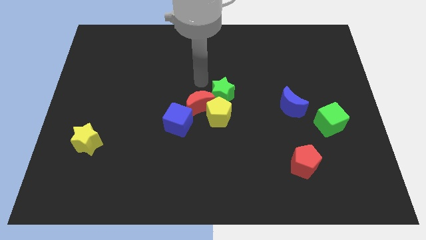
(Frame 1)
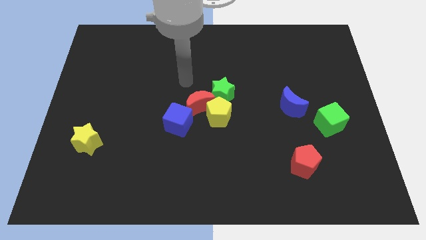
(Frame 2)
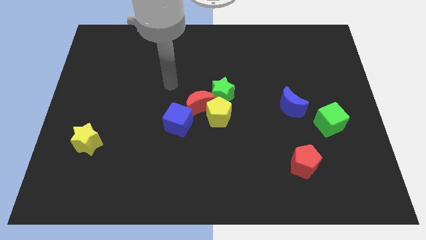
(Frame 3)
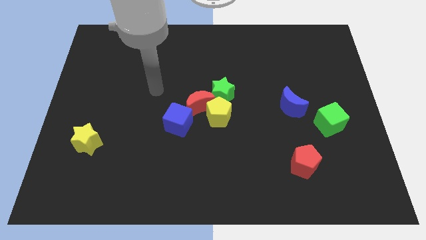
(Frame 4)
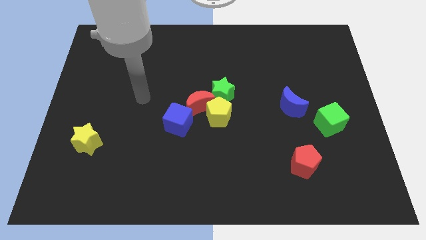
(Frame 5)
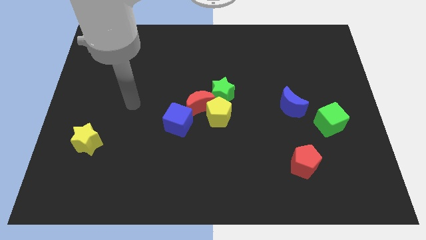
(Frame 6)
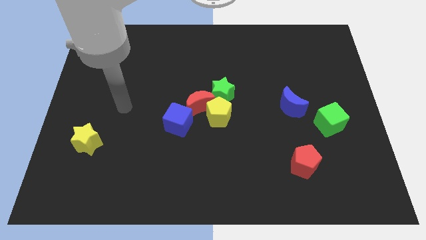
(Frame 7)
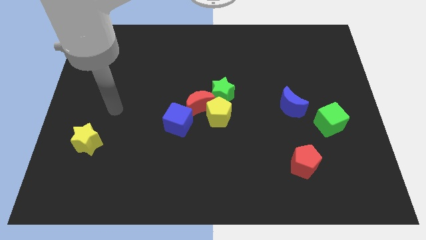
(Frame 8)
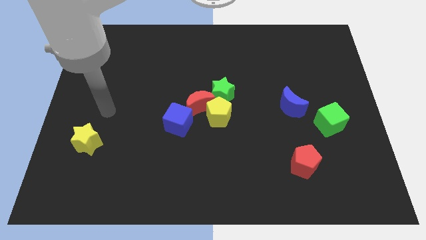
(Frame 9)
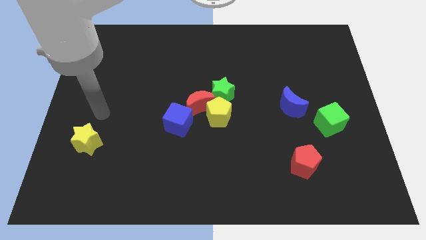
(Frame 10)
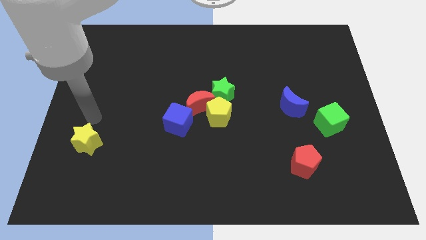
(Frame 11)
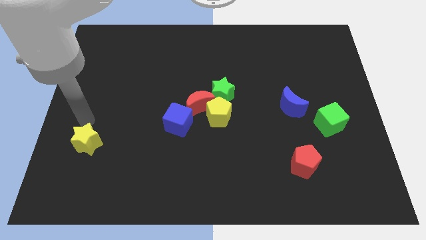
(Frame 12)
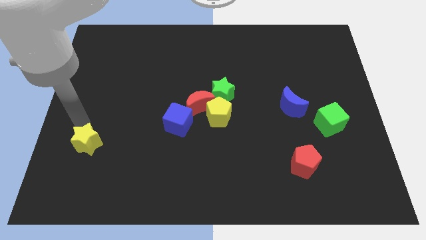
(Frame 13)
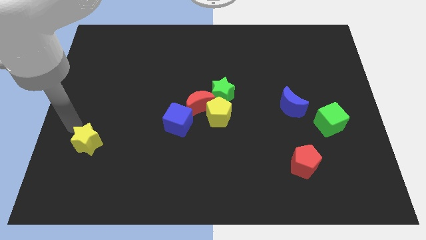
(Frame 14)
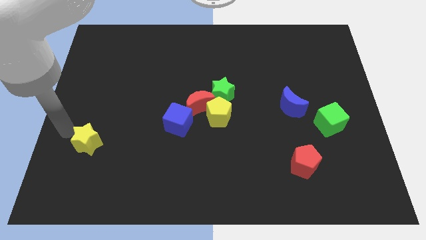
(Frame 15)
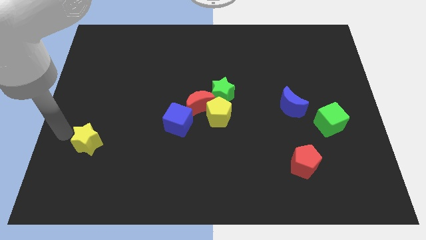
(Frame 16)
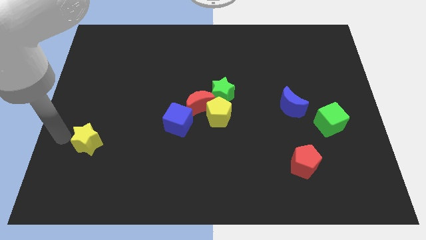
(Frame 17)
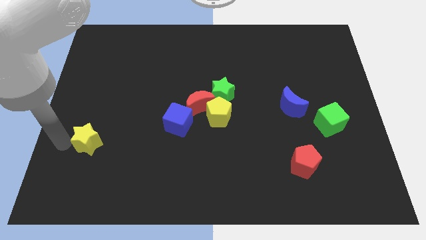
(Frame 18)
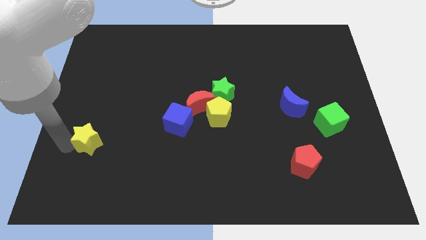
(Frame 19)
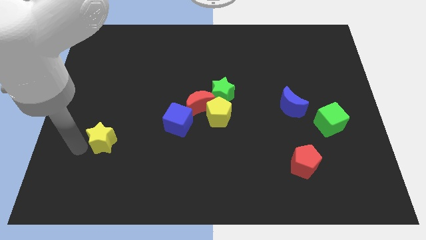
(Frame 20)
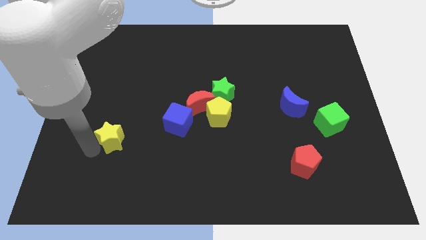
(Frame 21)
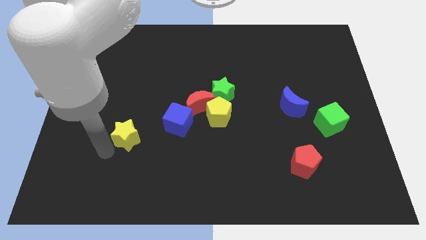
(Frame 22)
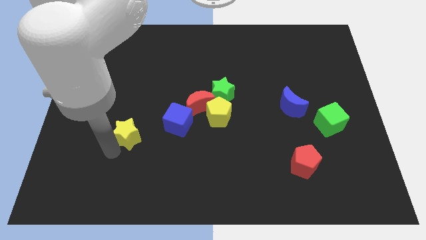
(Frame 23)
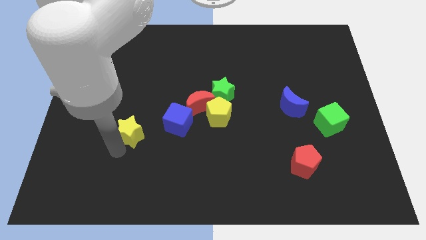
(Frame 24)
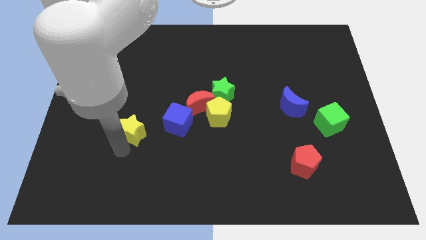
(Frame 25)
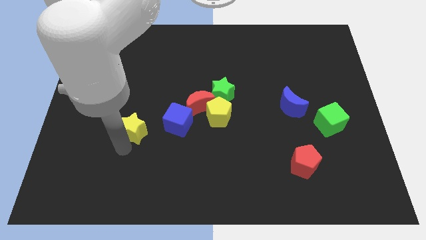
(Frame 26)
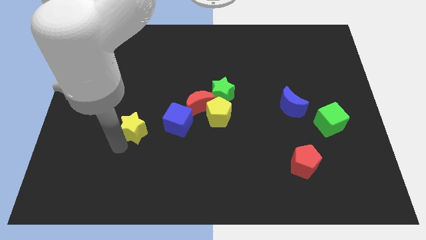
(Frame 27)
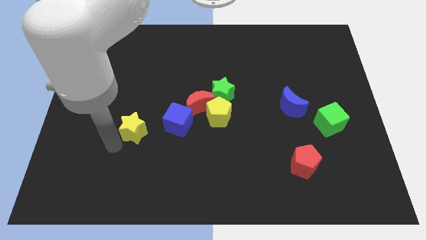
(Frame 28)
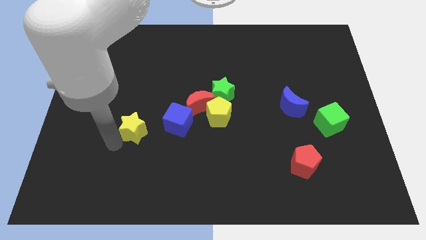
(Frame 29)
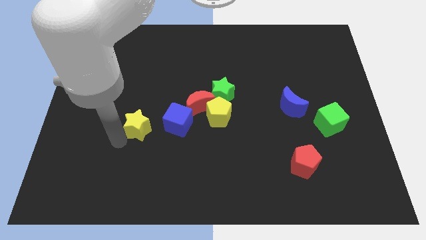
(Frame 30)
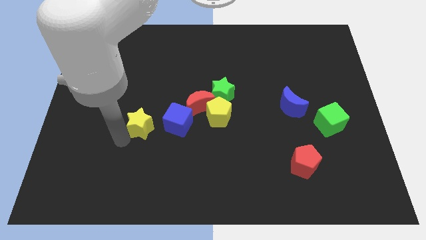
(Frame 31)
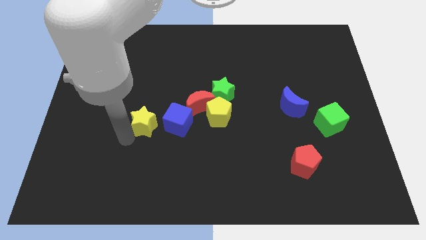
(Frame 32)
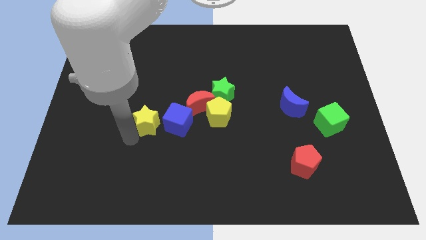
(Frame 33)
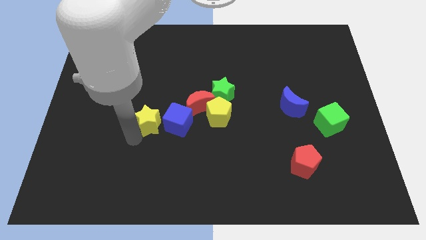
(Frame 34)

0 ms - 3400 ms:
place the yellow star to the left side of the blue cube

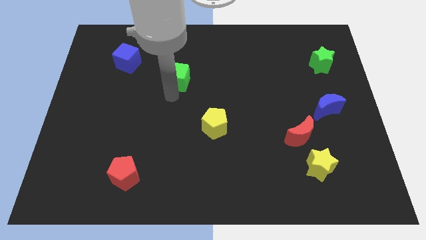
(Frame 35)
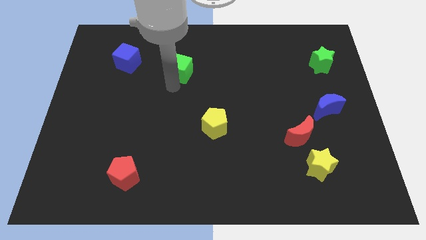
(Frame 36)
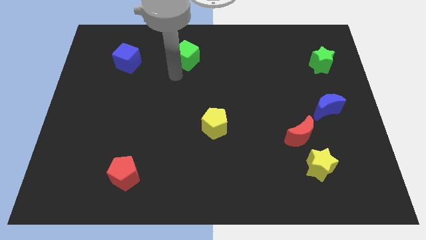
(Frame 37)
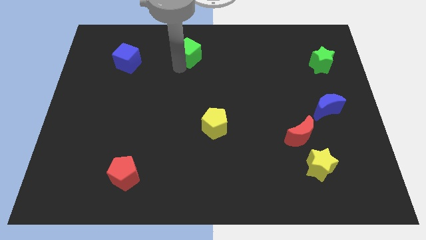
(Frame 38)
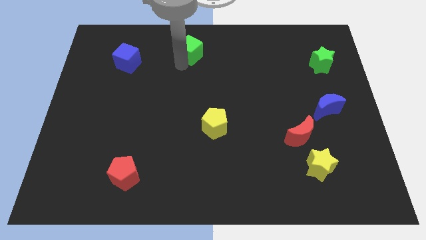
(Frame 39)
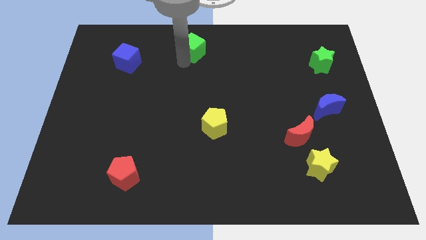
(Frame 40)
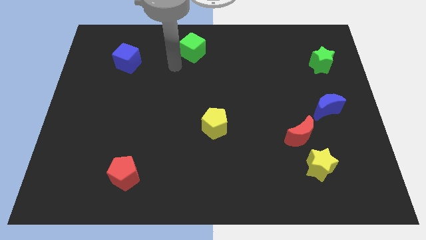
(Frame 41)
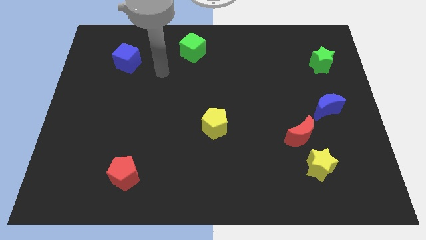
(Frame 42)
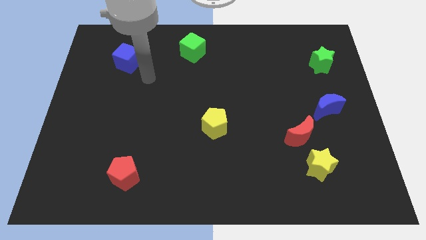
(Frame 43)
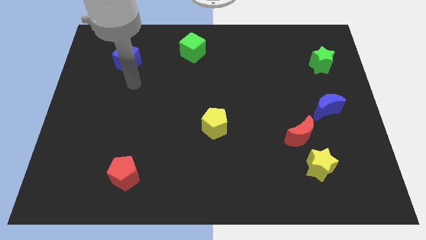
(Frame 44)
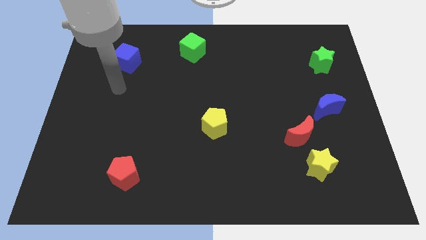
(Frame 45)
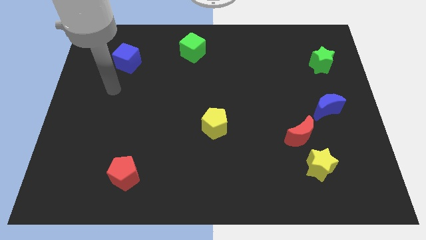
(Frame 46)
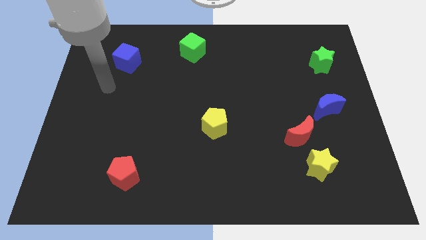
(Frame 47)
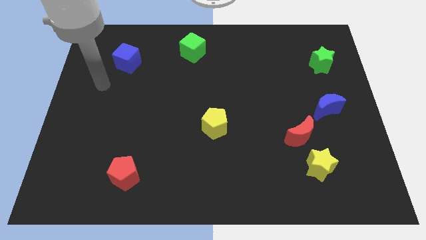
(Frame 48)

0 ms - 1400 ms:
move the green cube towards the top center

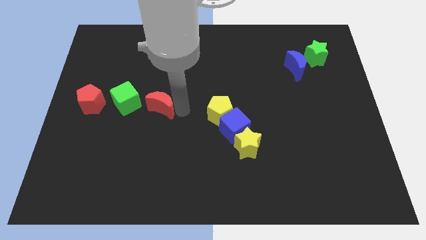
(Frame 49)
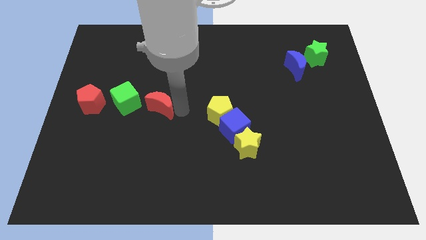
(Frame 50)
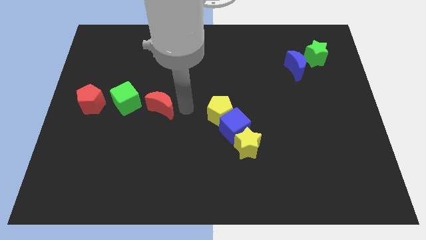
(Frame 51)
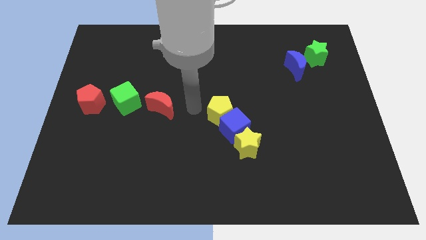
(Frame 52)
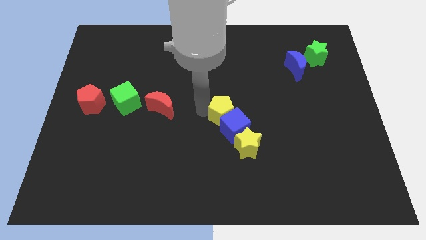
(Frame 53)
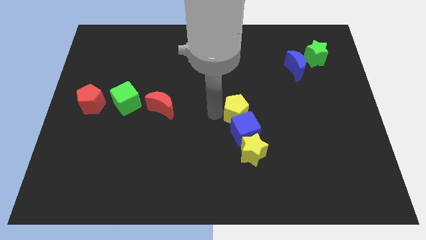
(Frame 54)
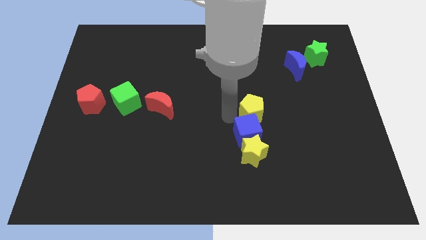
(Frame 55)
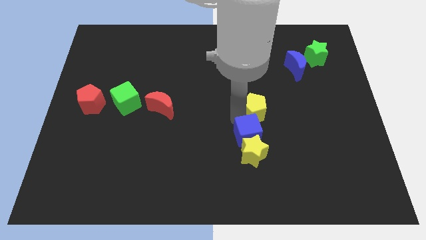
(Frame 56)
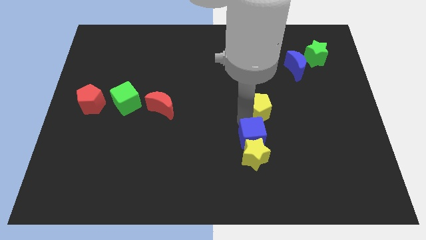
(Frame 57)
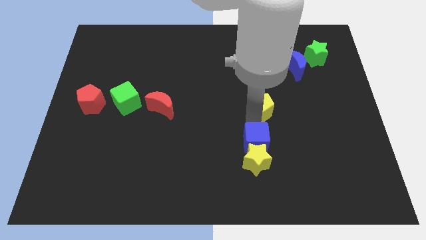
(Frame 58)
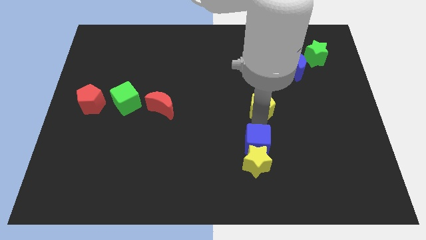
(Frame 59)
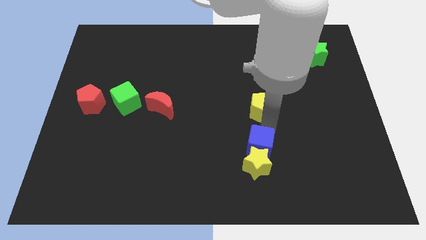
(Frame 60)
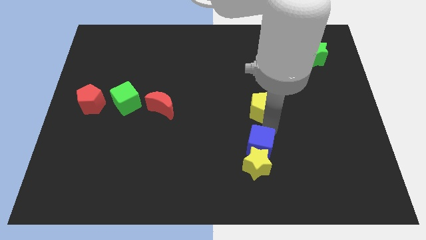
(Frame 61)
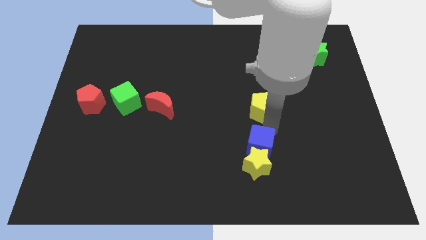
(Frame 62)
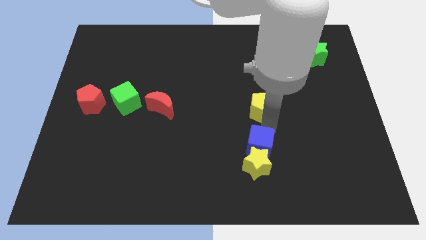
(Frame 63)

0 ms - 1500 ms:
move your hand in between the yellow pentagon and blue block

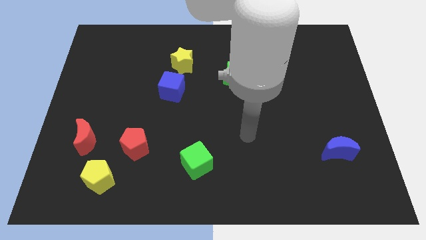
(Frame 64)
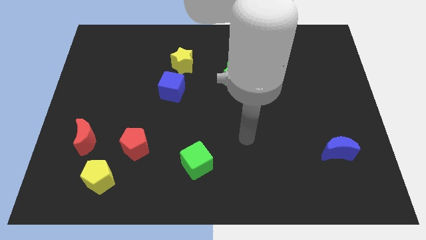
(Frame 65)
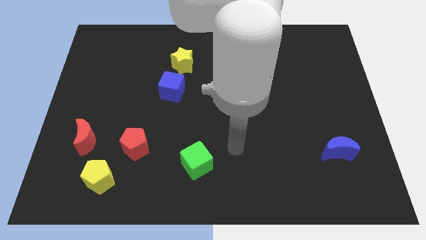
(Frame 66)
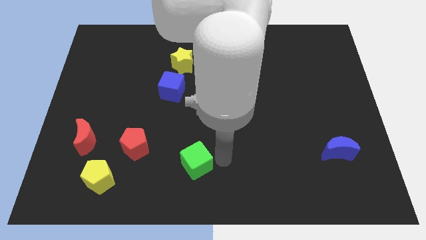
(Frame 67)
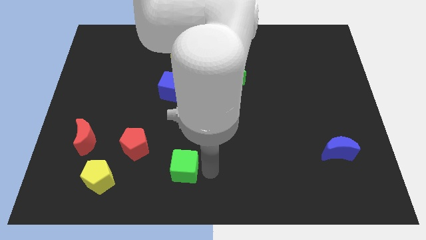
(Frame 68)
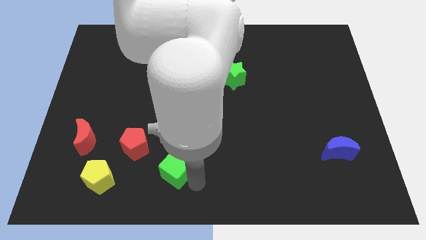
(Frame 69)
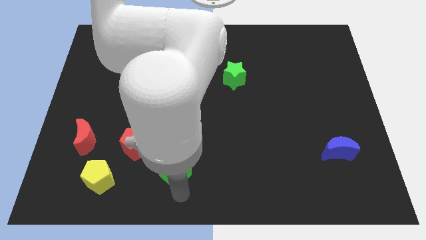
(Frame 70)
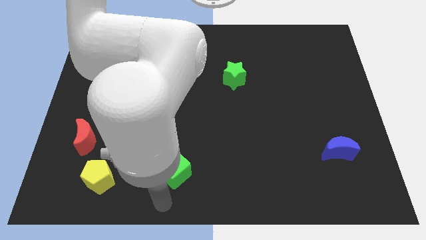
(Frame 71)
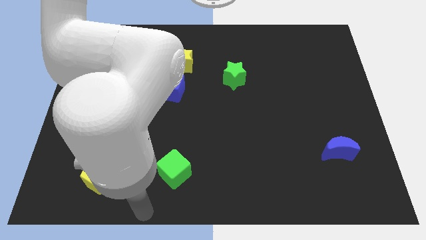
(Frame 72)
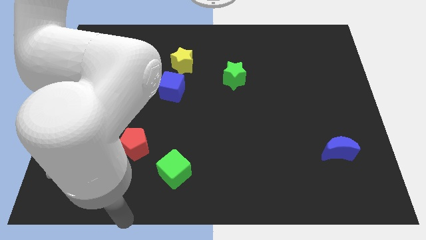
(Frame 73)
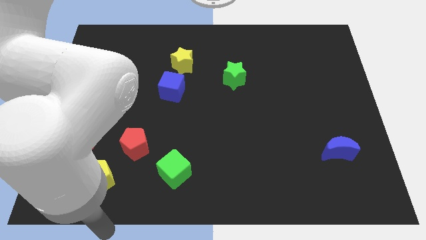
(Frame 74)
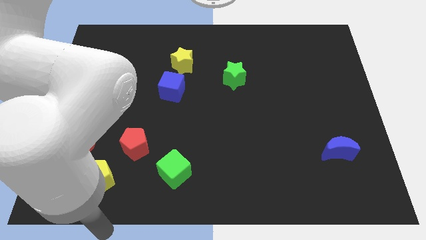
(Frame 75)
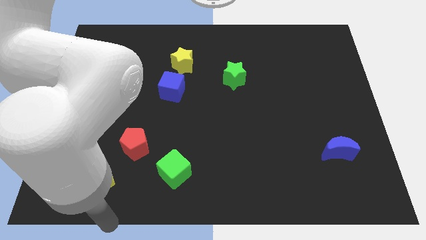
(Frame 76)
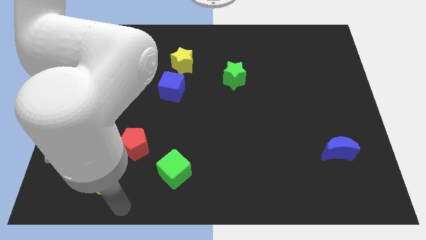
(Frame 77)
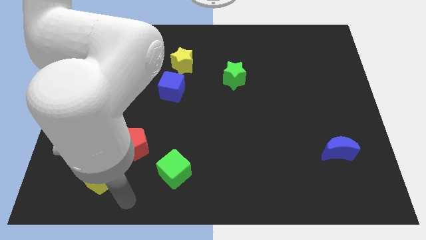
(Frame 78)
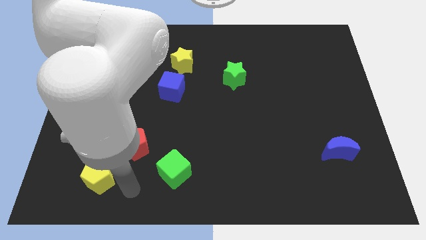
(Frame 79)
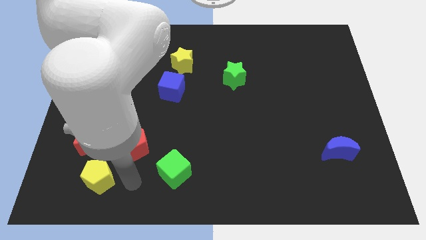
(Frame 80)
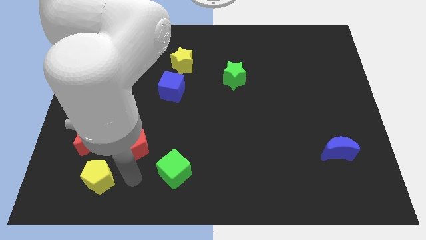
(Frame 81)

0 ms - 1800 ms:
slightly push the green cube to the right of the yellow pentagon

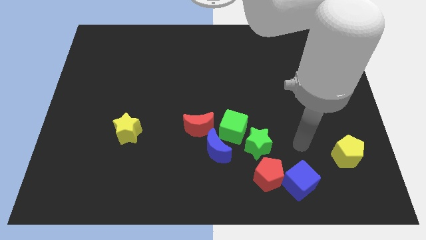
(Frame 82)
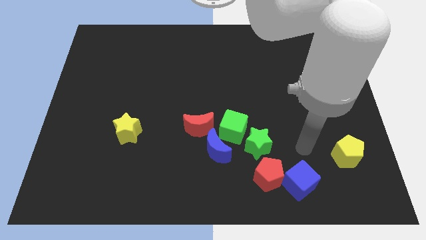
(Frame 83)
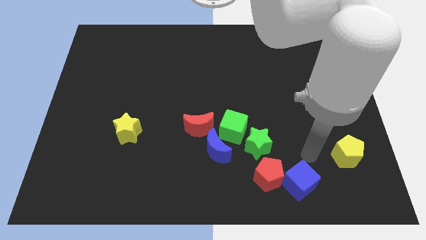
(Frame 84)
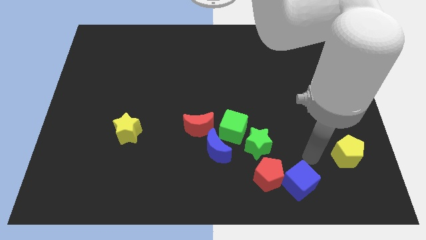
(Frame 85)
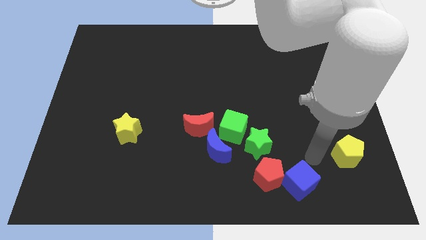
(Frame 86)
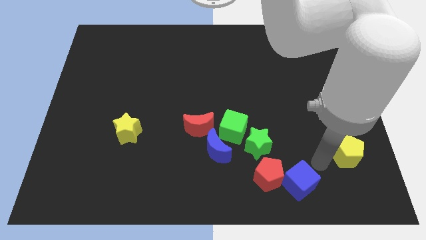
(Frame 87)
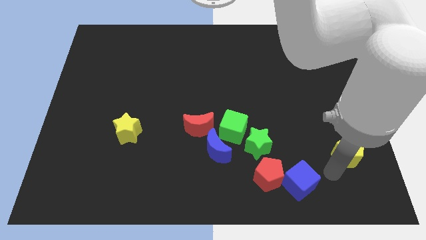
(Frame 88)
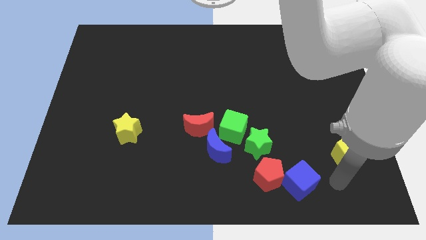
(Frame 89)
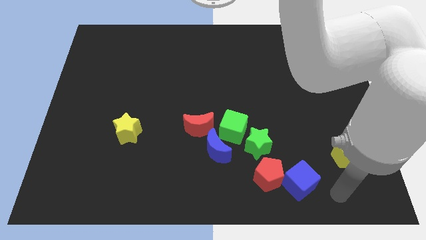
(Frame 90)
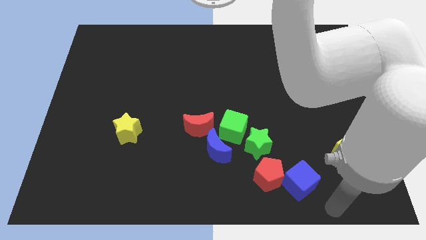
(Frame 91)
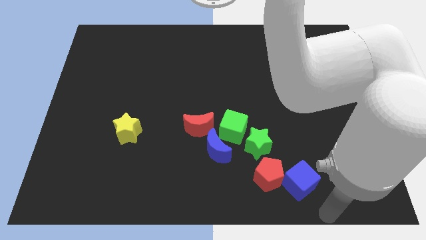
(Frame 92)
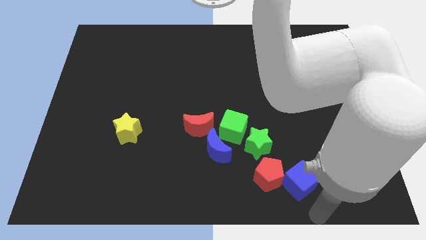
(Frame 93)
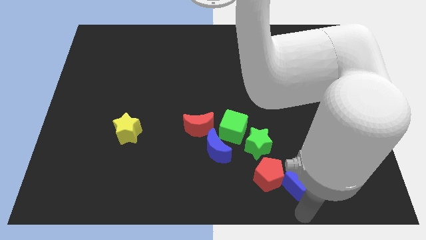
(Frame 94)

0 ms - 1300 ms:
point your arm at the bottom of blue cube
